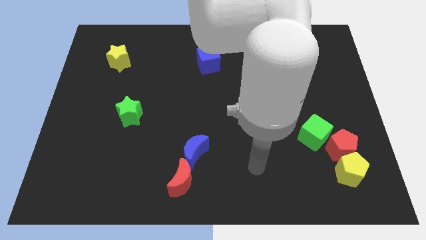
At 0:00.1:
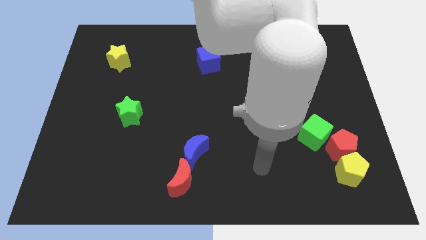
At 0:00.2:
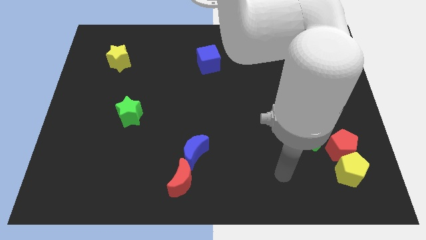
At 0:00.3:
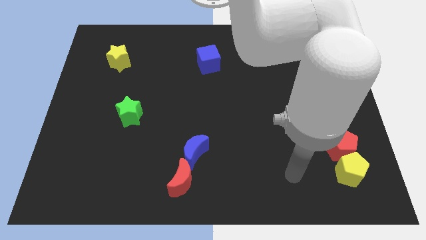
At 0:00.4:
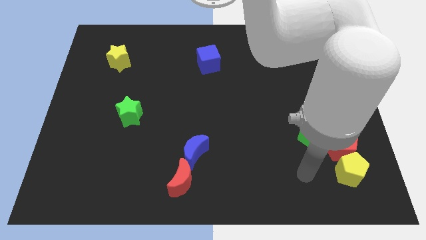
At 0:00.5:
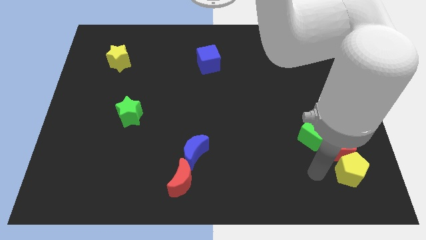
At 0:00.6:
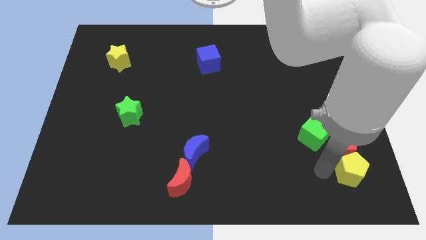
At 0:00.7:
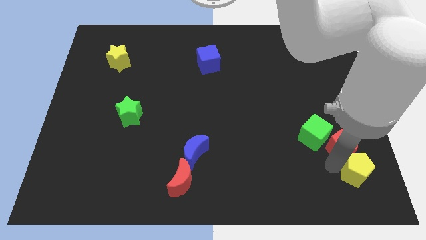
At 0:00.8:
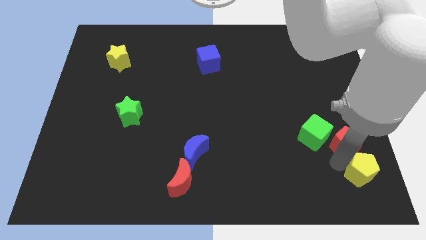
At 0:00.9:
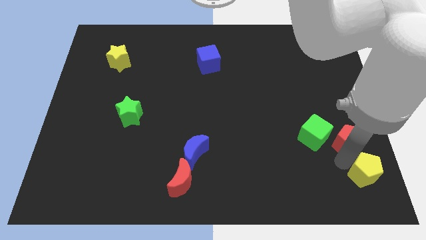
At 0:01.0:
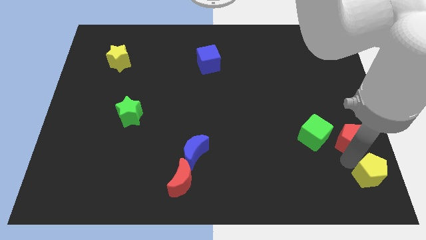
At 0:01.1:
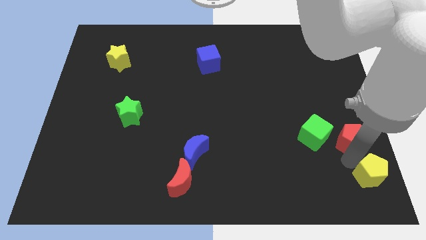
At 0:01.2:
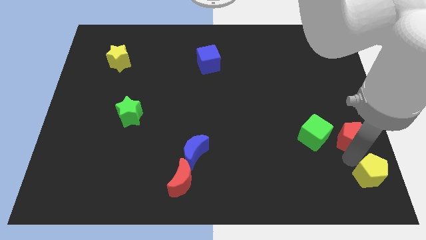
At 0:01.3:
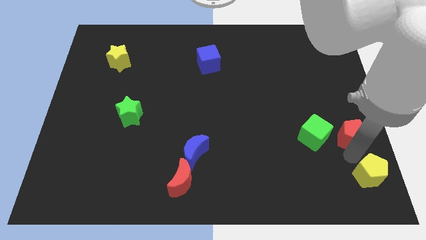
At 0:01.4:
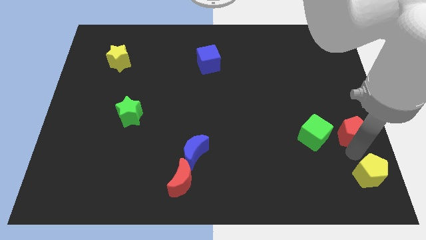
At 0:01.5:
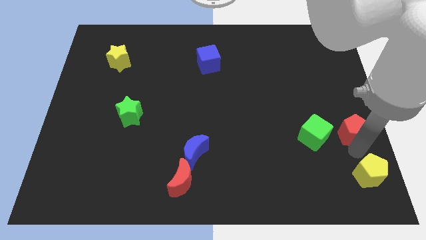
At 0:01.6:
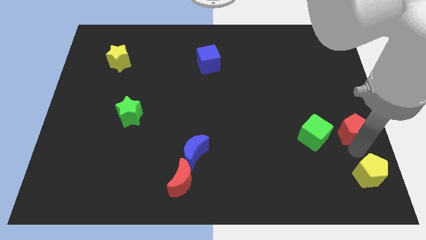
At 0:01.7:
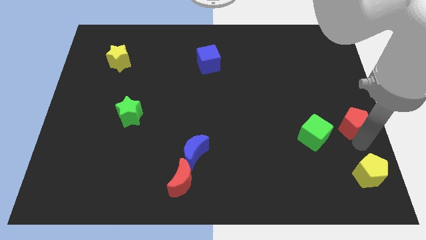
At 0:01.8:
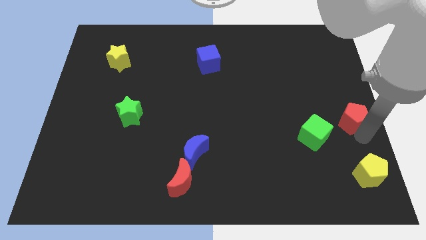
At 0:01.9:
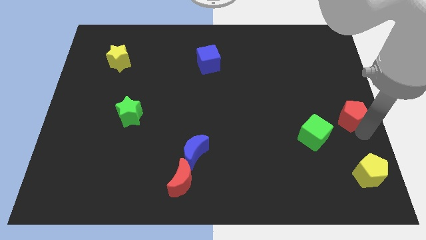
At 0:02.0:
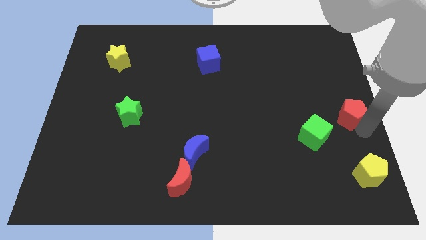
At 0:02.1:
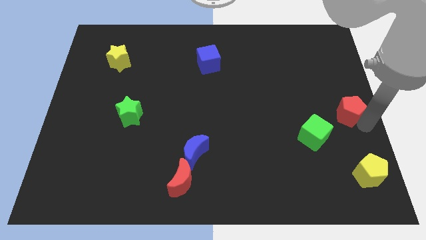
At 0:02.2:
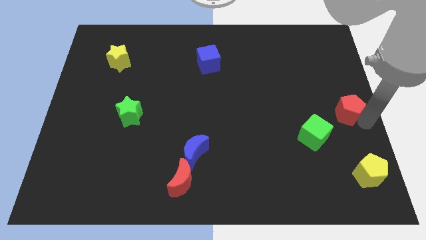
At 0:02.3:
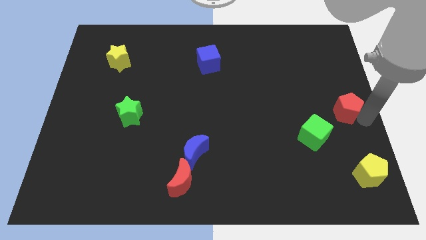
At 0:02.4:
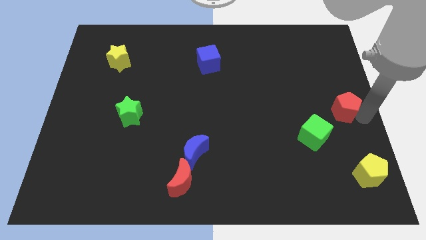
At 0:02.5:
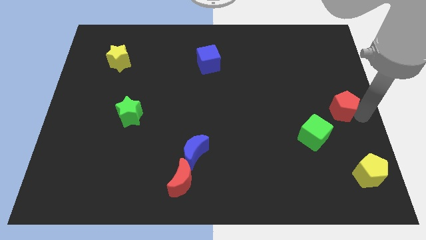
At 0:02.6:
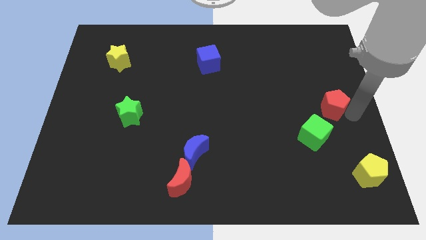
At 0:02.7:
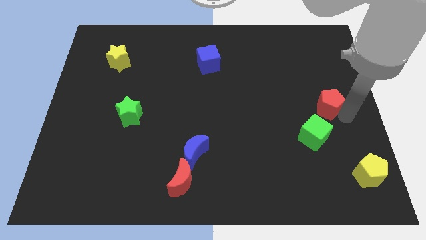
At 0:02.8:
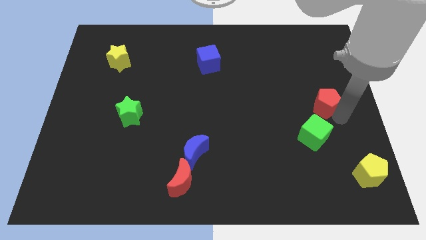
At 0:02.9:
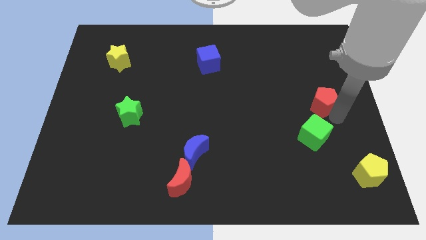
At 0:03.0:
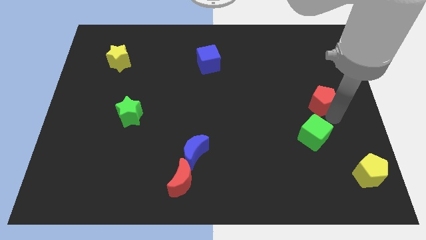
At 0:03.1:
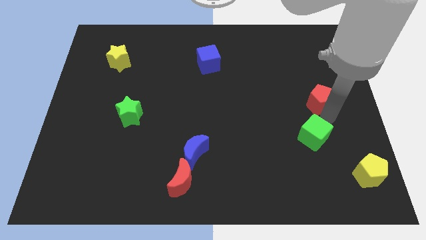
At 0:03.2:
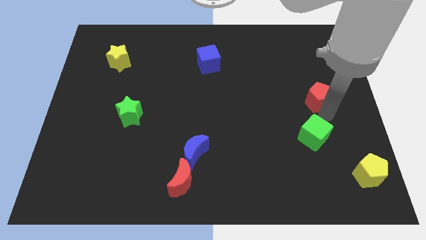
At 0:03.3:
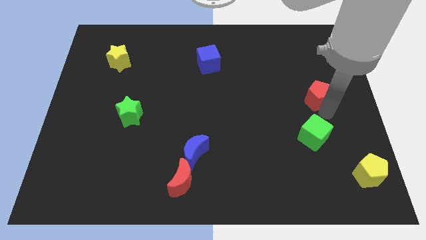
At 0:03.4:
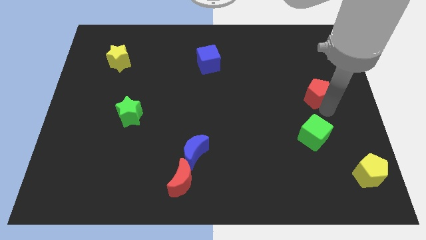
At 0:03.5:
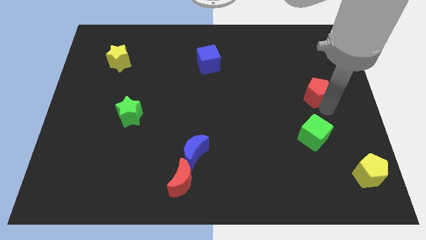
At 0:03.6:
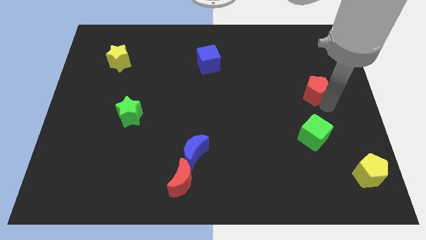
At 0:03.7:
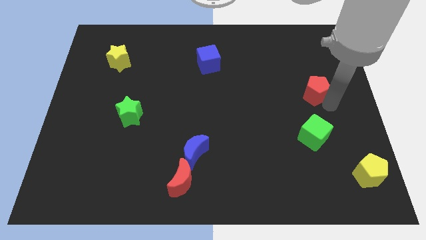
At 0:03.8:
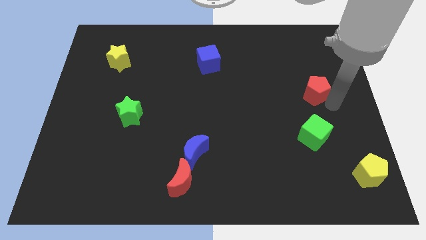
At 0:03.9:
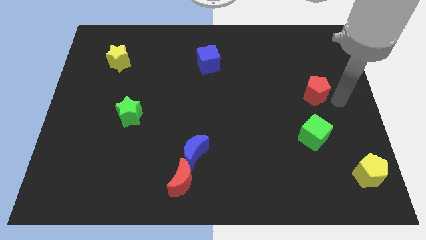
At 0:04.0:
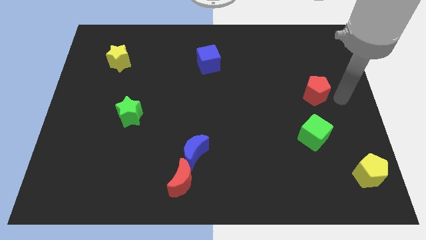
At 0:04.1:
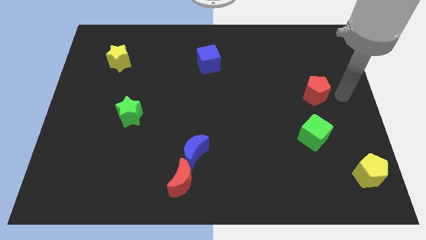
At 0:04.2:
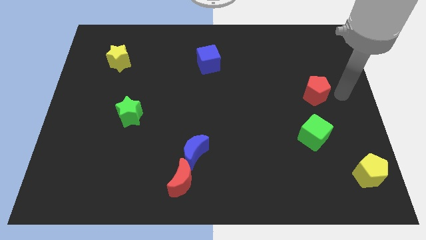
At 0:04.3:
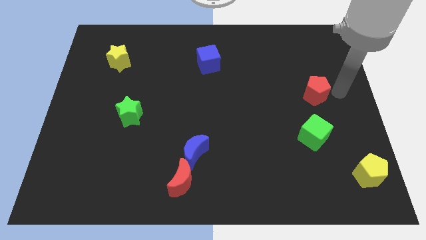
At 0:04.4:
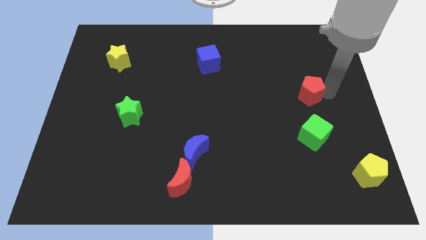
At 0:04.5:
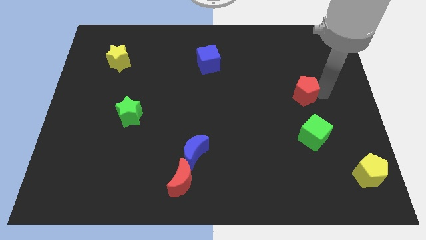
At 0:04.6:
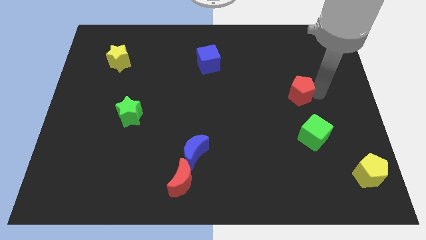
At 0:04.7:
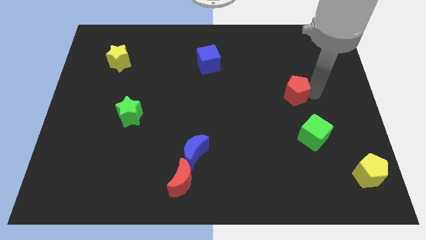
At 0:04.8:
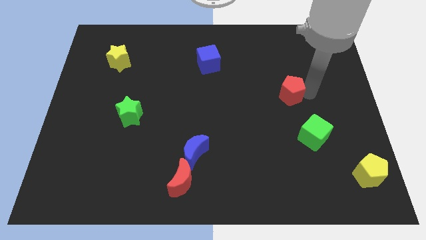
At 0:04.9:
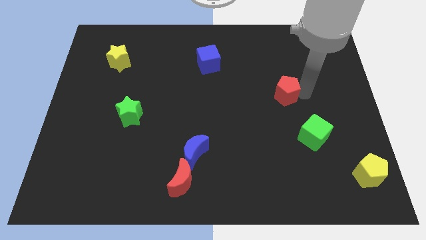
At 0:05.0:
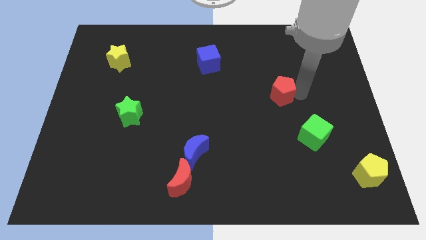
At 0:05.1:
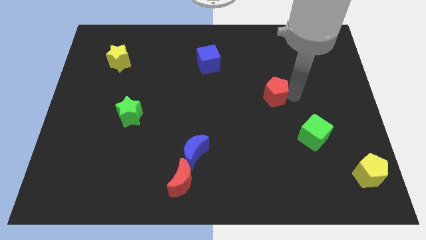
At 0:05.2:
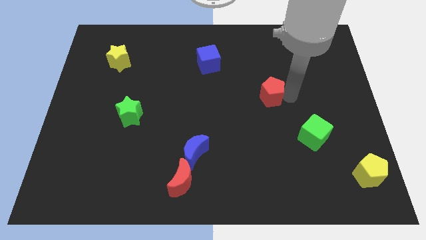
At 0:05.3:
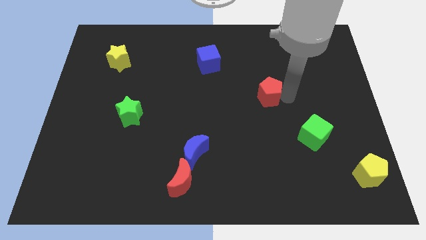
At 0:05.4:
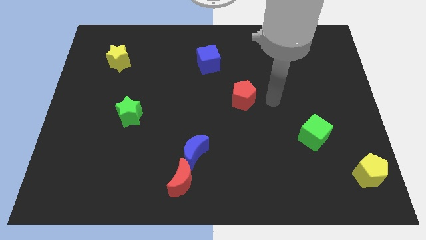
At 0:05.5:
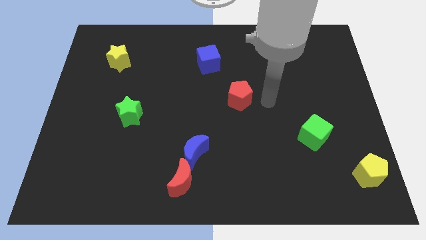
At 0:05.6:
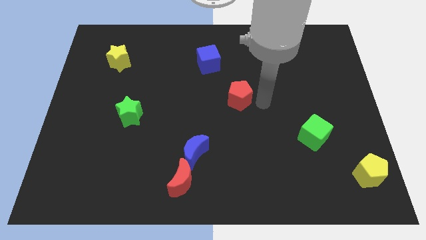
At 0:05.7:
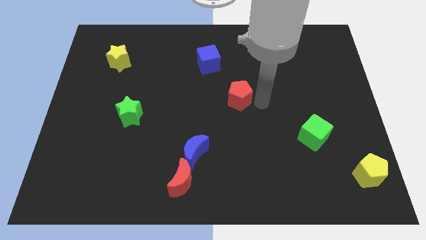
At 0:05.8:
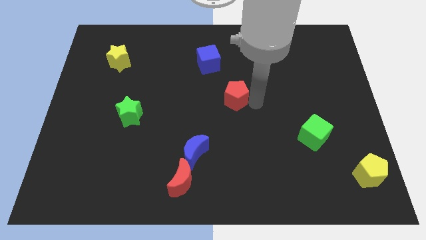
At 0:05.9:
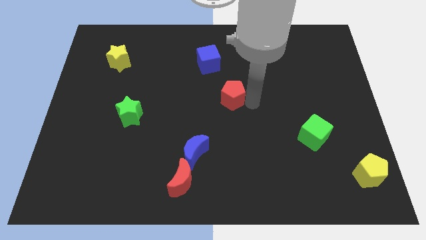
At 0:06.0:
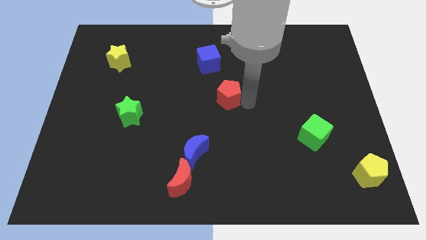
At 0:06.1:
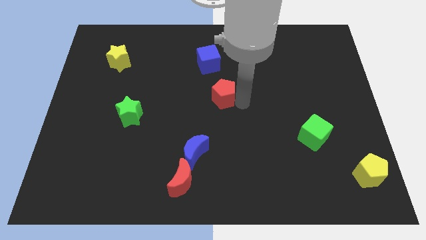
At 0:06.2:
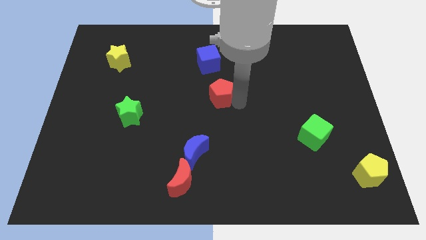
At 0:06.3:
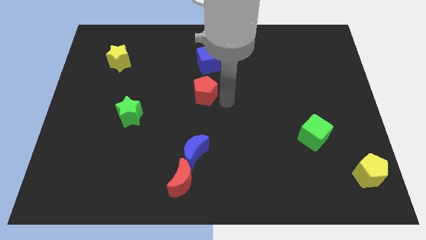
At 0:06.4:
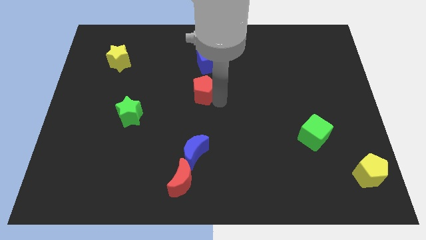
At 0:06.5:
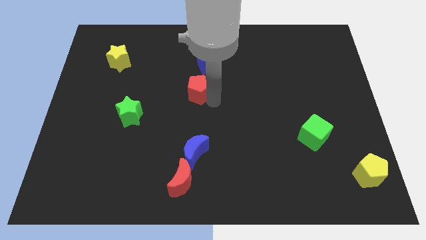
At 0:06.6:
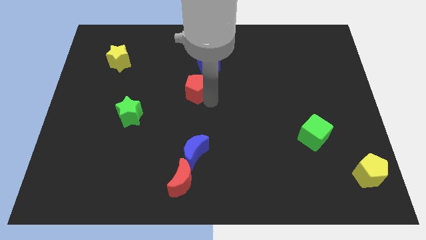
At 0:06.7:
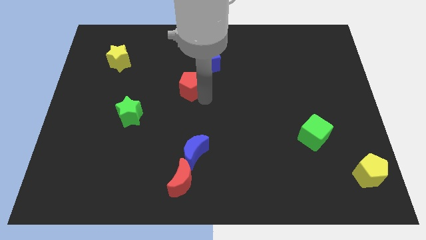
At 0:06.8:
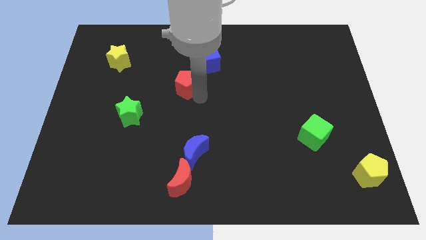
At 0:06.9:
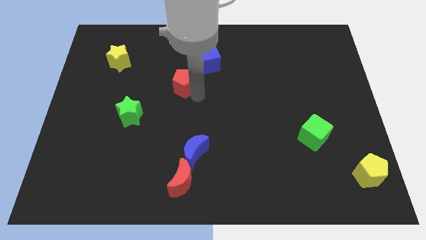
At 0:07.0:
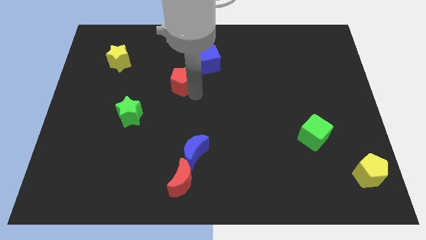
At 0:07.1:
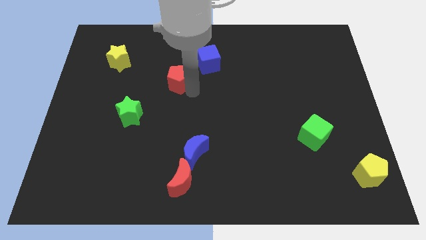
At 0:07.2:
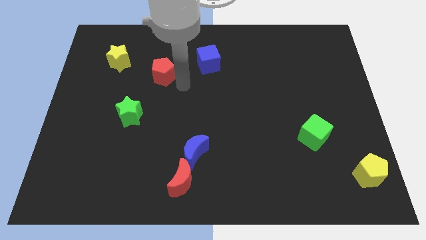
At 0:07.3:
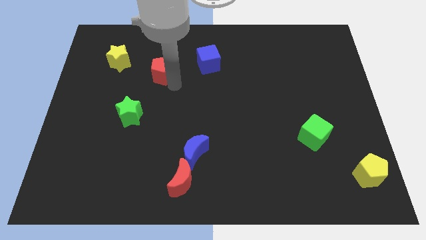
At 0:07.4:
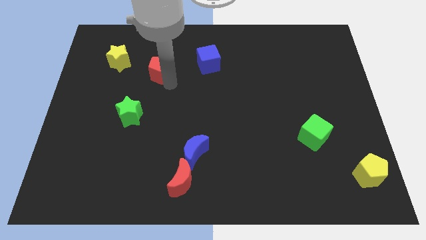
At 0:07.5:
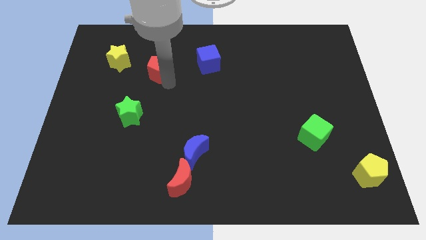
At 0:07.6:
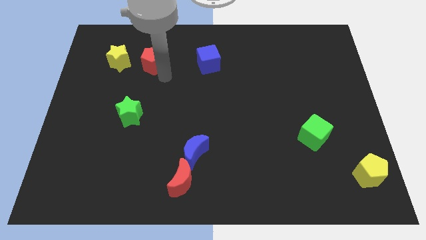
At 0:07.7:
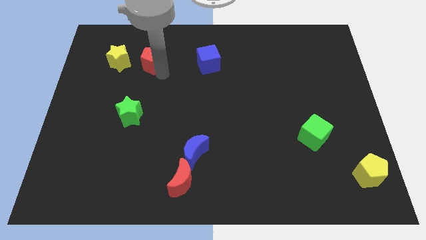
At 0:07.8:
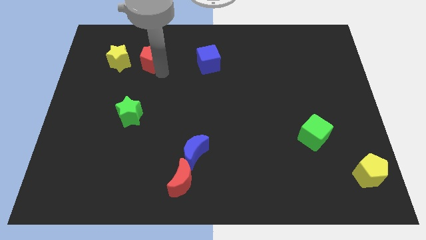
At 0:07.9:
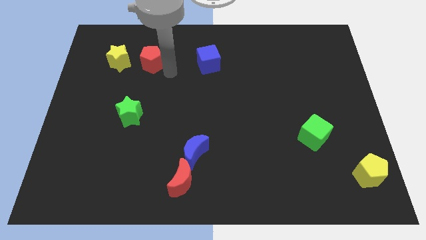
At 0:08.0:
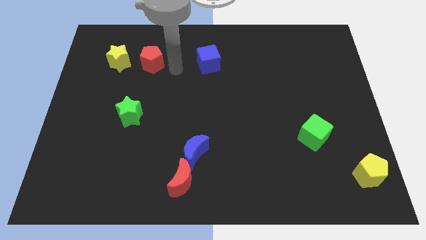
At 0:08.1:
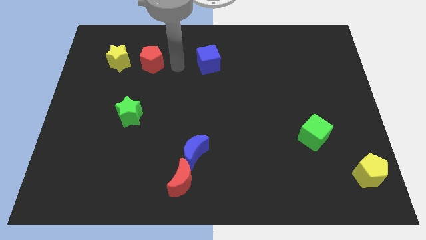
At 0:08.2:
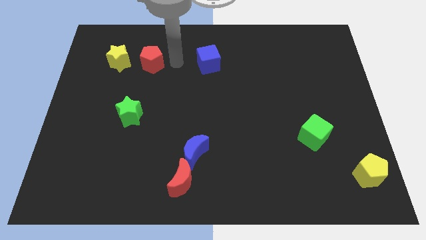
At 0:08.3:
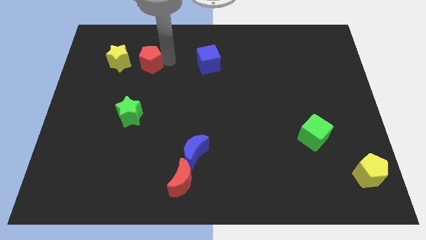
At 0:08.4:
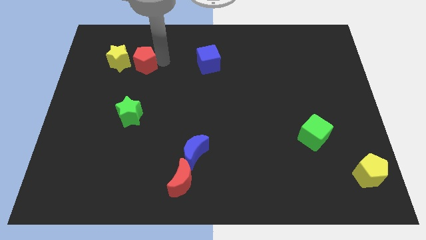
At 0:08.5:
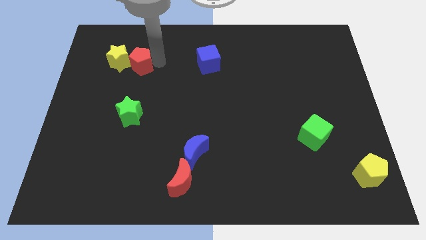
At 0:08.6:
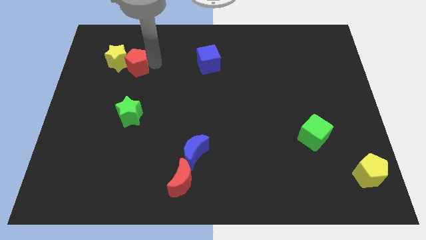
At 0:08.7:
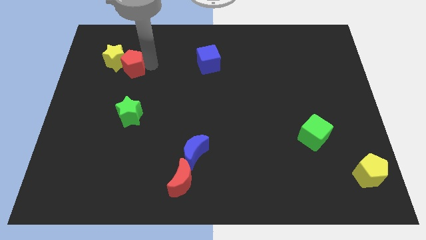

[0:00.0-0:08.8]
move the red pentagon next to the yellow star

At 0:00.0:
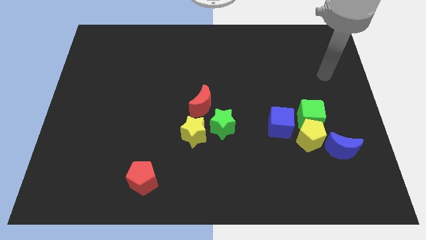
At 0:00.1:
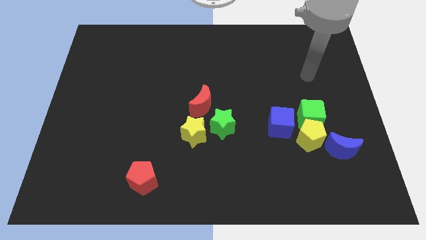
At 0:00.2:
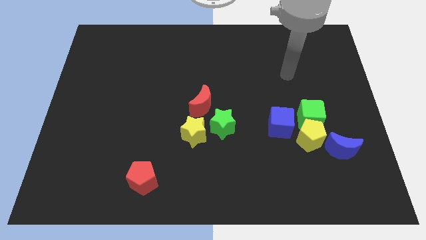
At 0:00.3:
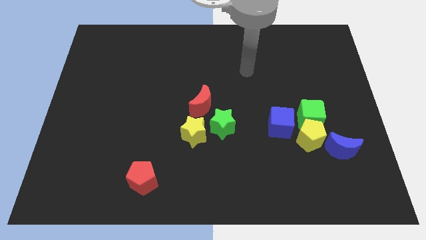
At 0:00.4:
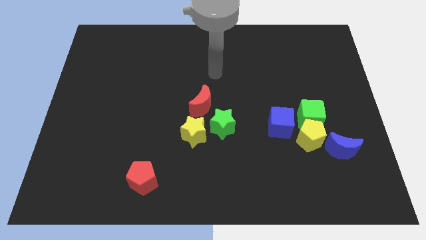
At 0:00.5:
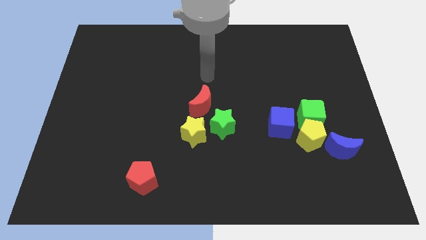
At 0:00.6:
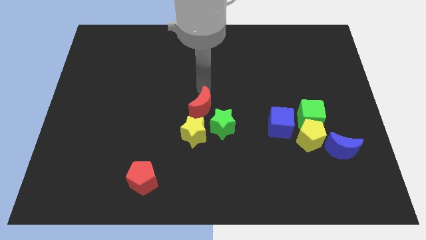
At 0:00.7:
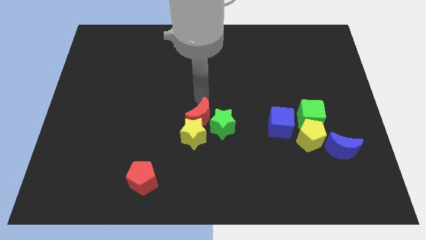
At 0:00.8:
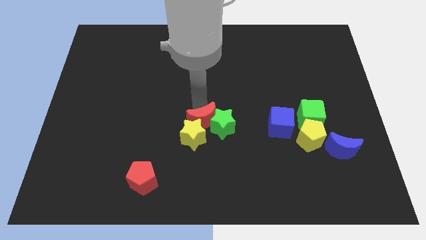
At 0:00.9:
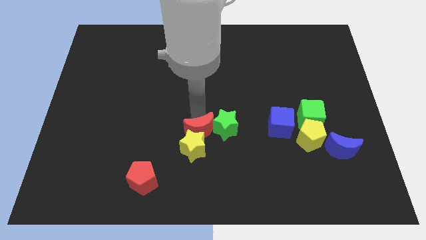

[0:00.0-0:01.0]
move the red moon next to the yellow star
